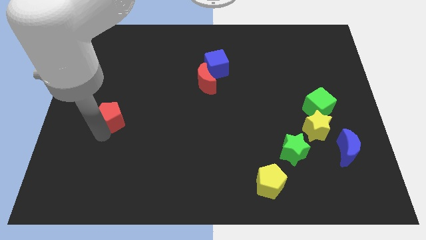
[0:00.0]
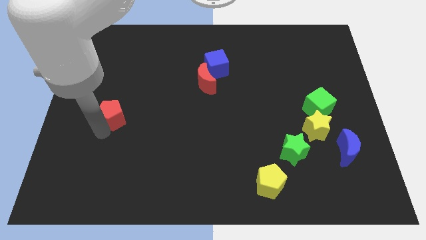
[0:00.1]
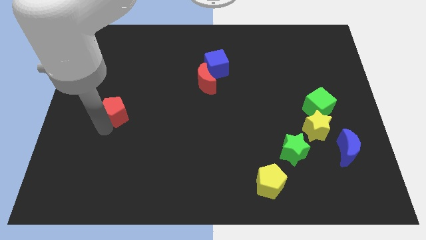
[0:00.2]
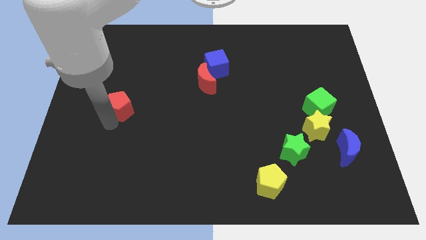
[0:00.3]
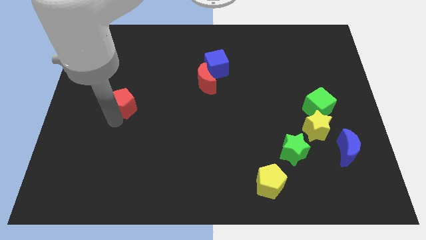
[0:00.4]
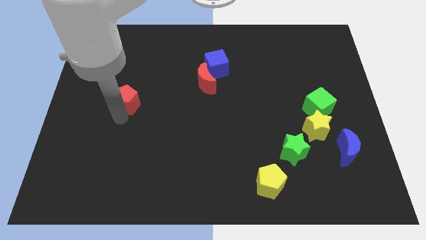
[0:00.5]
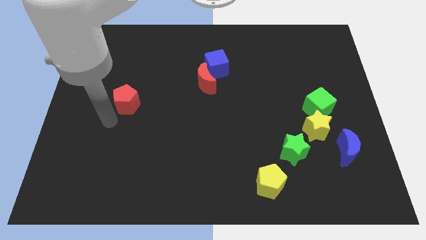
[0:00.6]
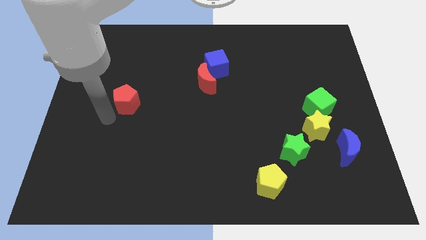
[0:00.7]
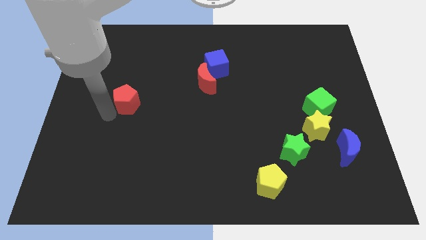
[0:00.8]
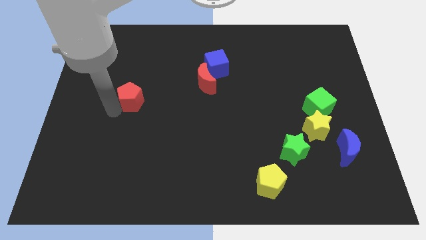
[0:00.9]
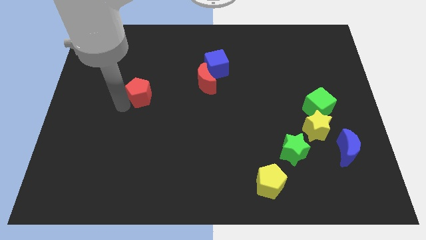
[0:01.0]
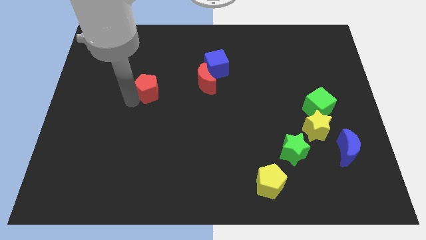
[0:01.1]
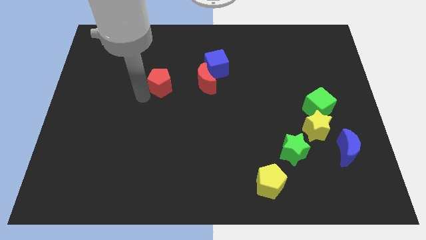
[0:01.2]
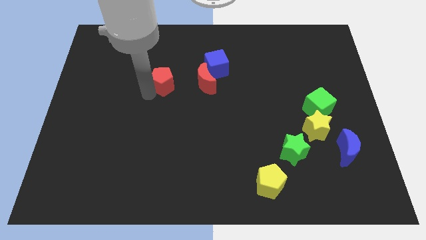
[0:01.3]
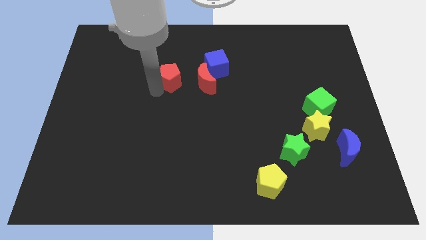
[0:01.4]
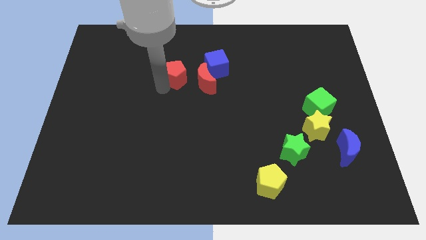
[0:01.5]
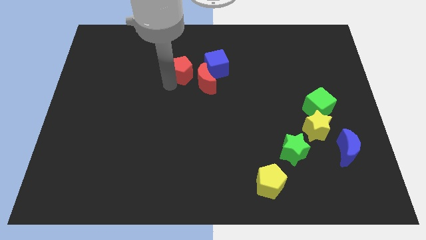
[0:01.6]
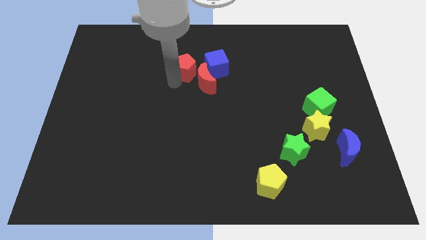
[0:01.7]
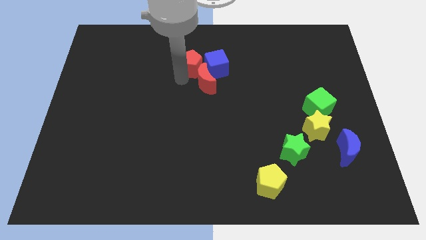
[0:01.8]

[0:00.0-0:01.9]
place the red pentagon to the left of the blue cube

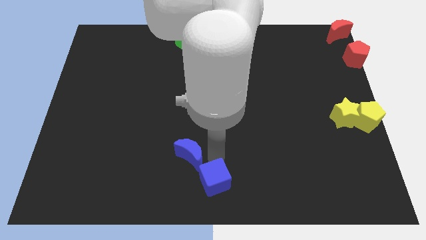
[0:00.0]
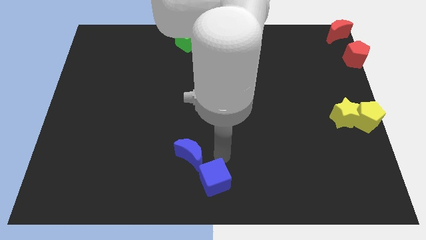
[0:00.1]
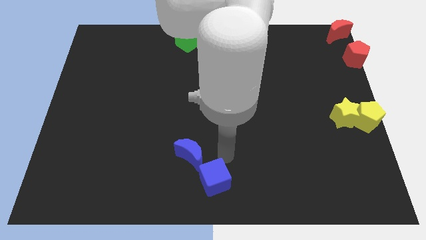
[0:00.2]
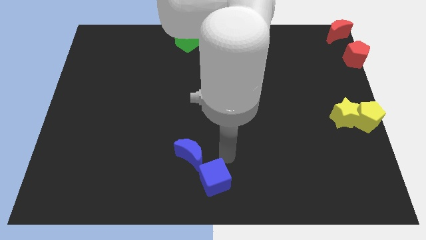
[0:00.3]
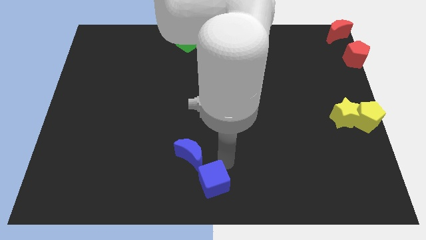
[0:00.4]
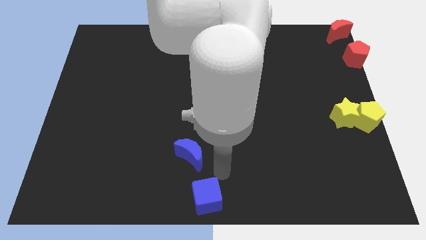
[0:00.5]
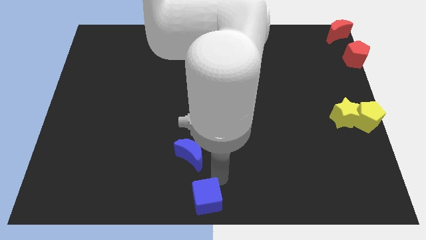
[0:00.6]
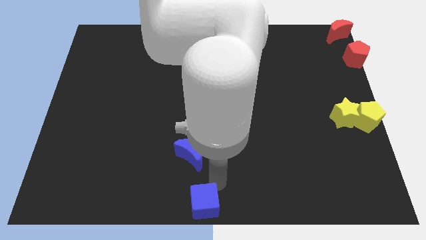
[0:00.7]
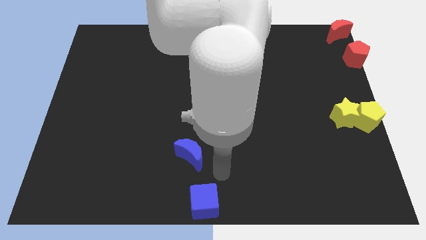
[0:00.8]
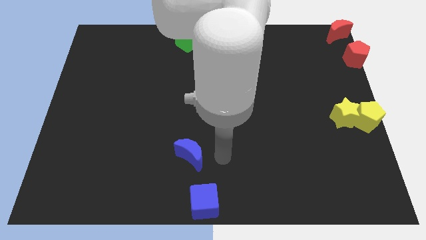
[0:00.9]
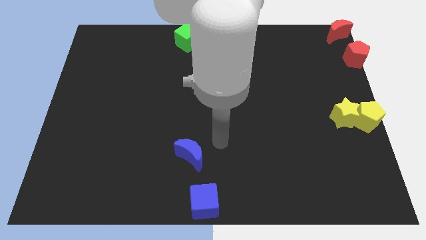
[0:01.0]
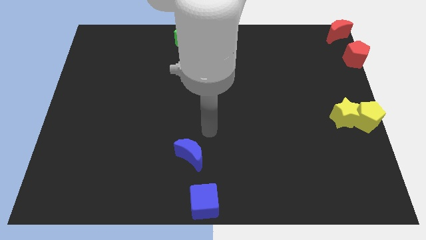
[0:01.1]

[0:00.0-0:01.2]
place the blue cube towards the bottom center of the board

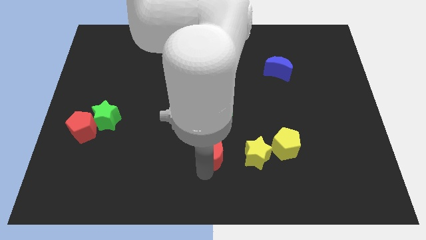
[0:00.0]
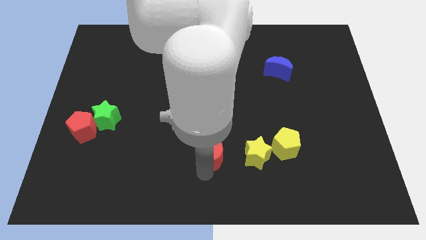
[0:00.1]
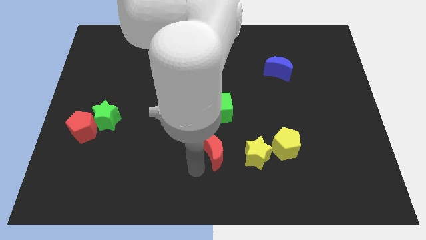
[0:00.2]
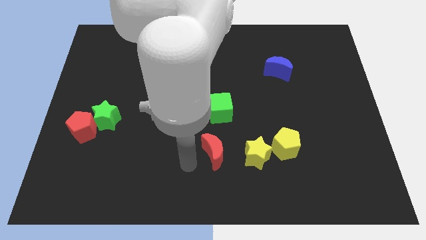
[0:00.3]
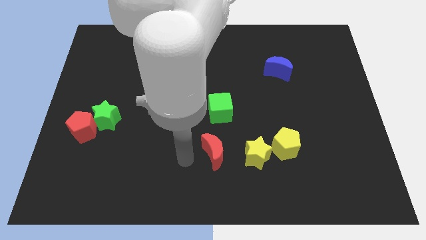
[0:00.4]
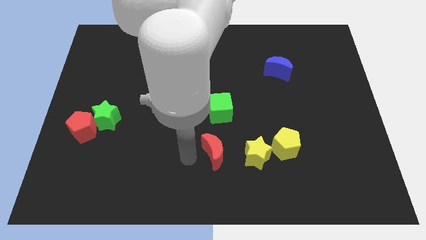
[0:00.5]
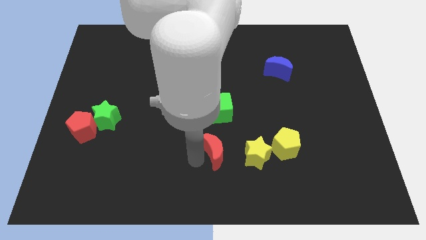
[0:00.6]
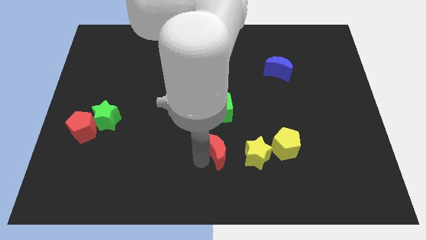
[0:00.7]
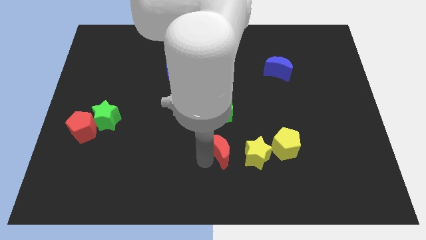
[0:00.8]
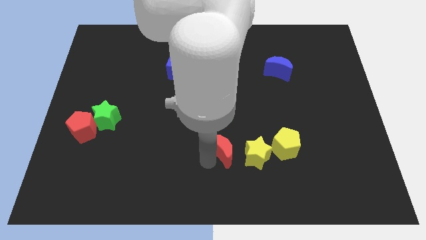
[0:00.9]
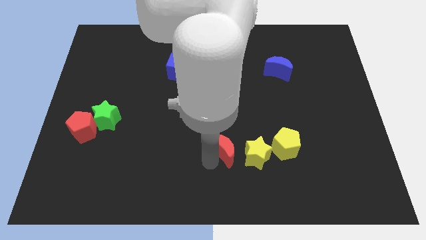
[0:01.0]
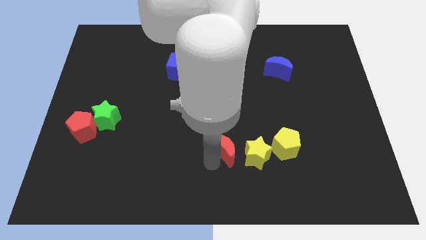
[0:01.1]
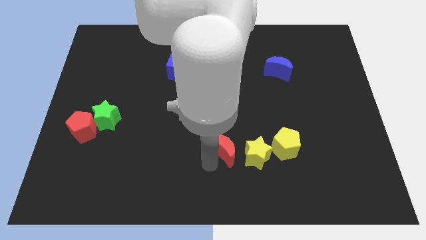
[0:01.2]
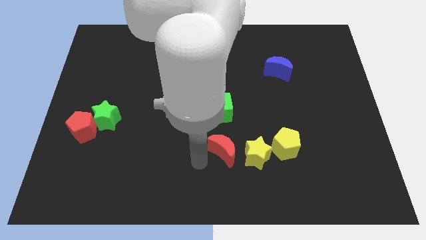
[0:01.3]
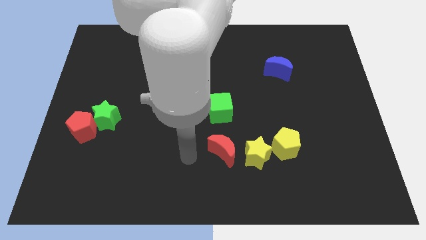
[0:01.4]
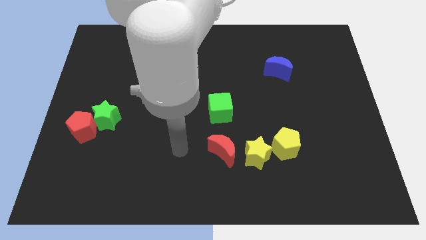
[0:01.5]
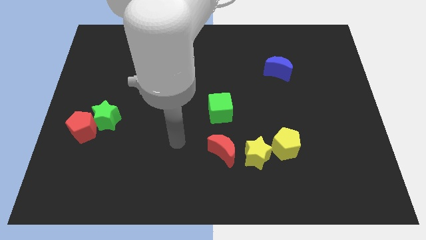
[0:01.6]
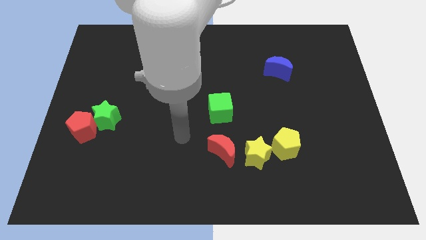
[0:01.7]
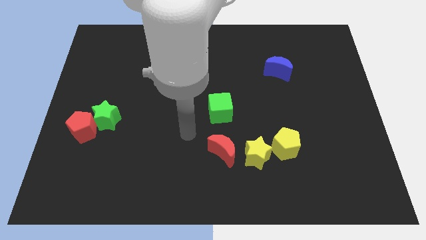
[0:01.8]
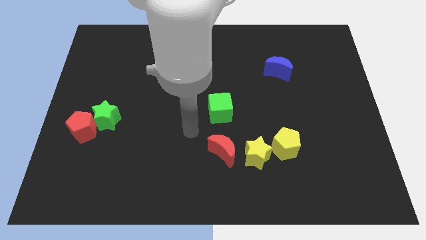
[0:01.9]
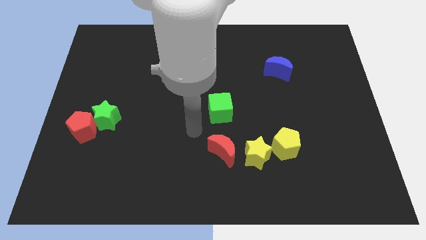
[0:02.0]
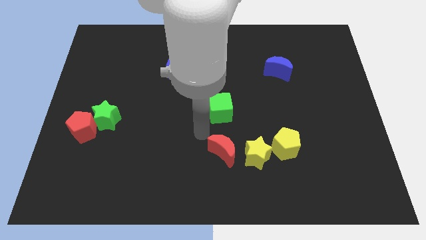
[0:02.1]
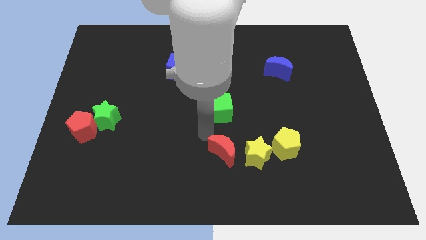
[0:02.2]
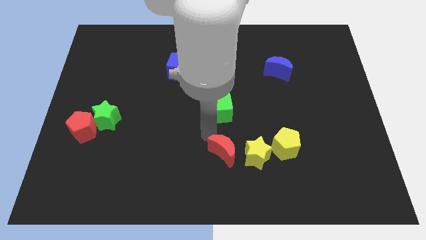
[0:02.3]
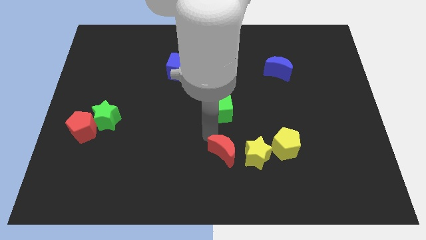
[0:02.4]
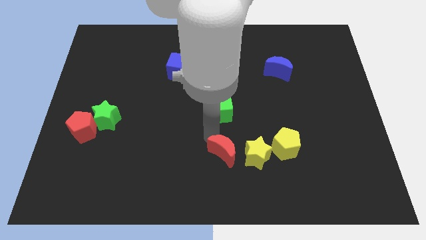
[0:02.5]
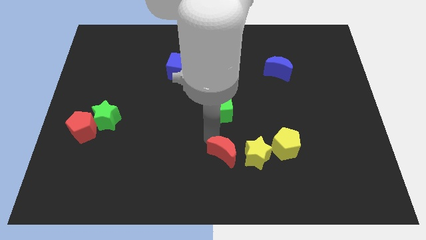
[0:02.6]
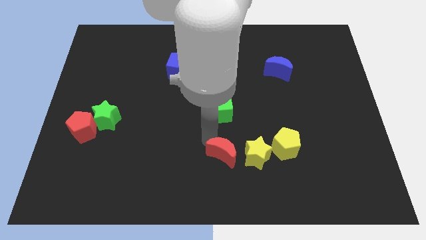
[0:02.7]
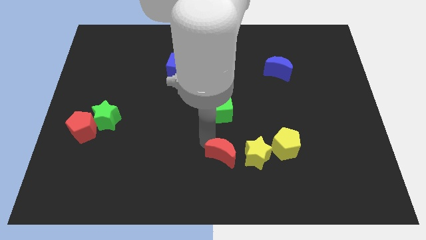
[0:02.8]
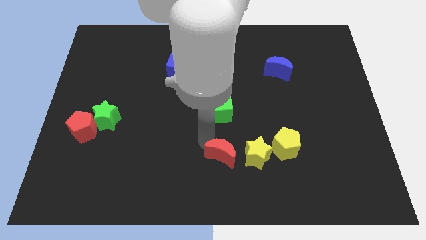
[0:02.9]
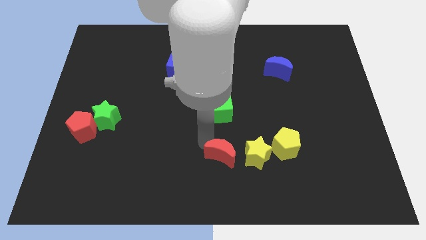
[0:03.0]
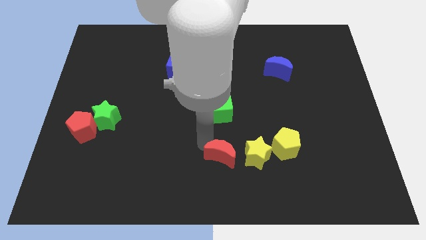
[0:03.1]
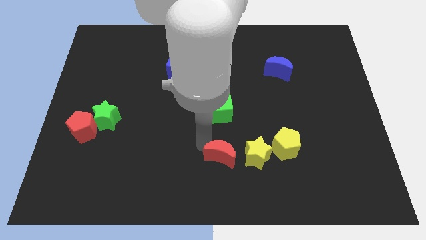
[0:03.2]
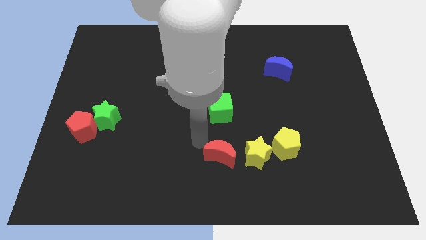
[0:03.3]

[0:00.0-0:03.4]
move the red moon a bit towards the right

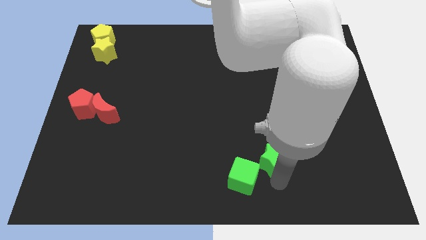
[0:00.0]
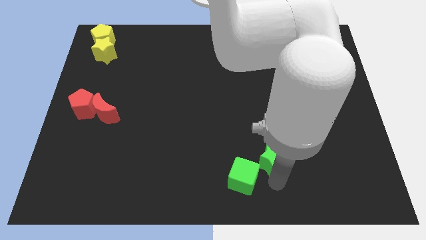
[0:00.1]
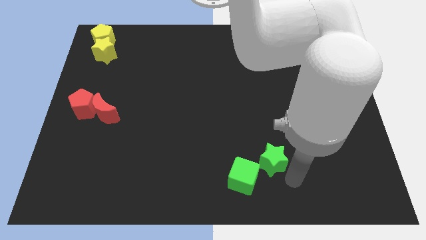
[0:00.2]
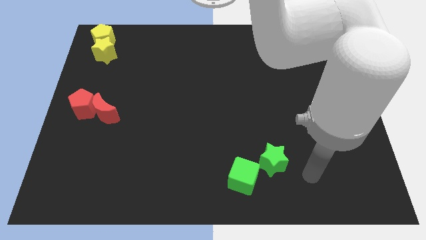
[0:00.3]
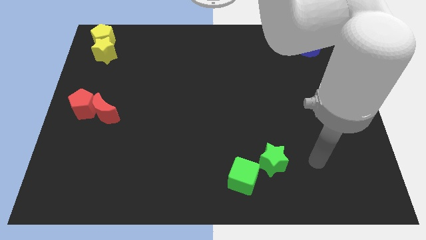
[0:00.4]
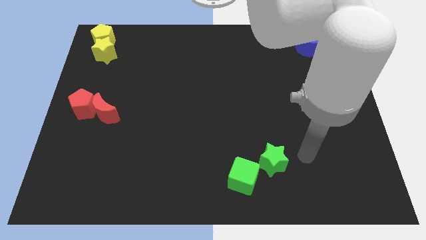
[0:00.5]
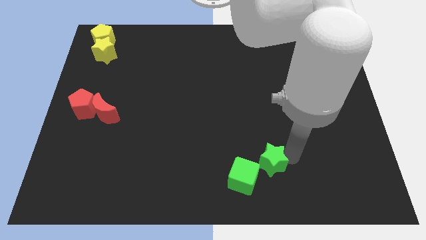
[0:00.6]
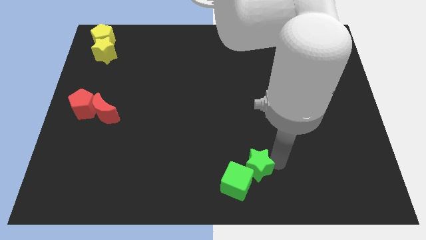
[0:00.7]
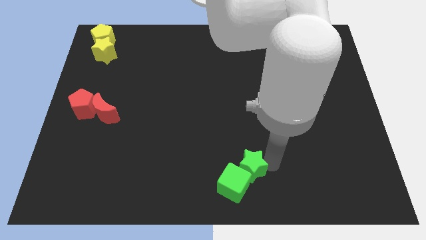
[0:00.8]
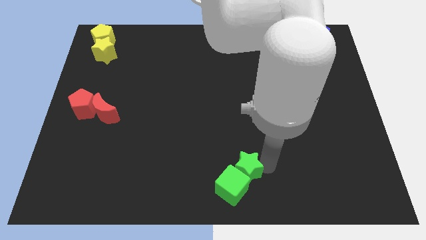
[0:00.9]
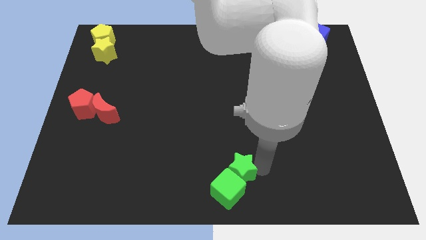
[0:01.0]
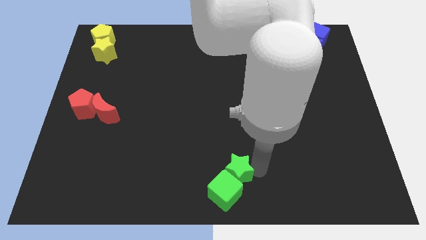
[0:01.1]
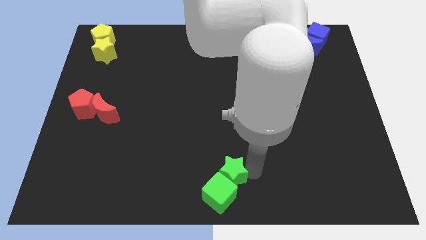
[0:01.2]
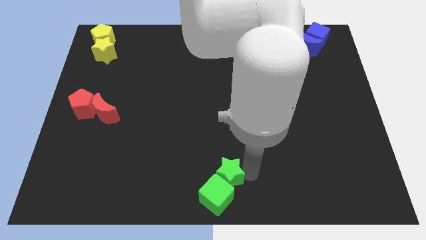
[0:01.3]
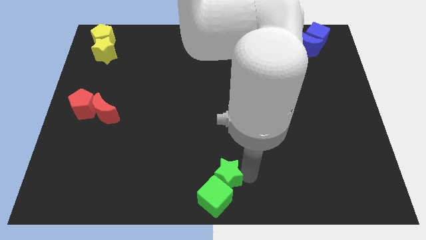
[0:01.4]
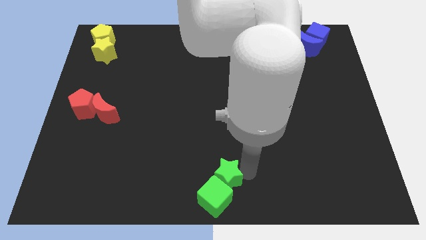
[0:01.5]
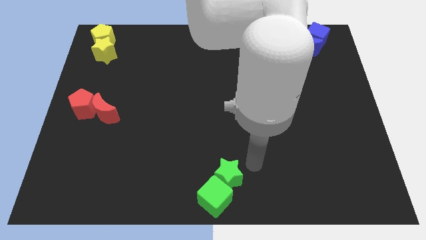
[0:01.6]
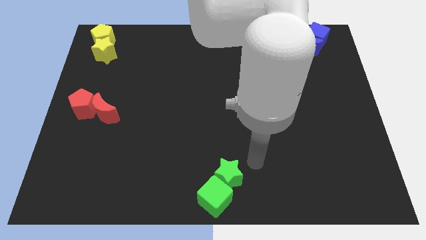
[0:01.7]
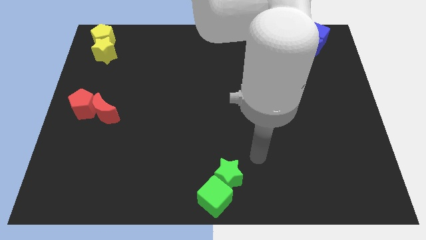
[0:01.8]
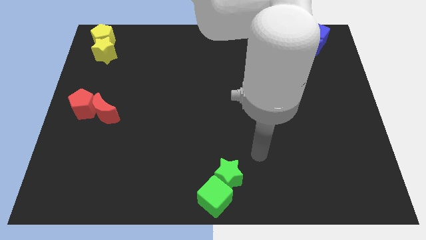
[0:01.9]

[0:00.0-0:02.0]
push green blocks into the bottom center

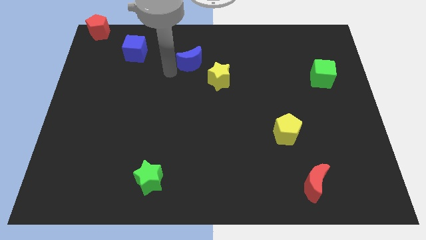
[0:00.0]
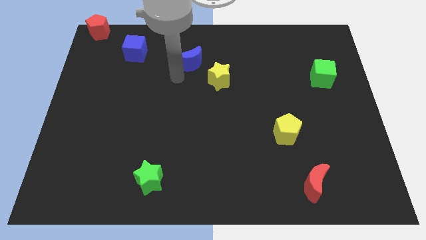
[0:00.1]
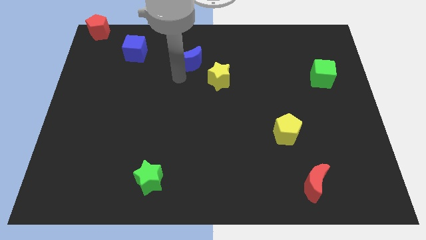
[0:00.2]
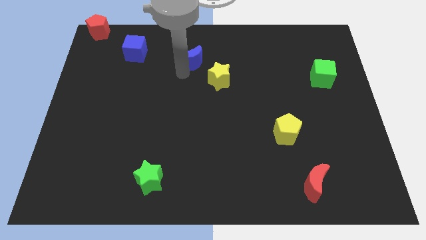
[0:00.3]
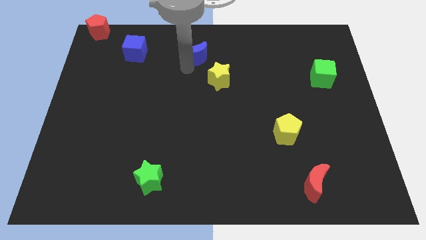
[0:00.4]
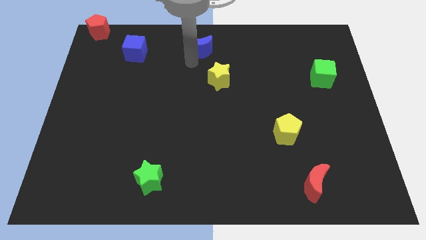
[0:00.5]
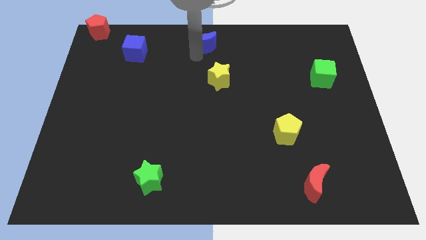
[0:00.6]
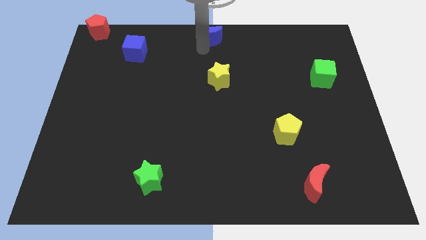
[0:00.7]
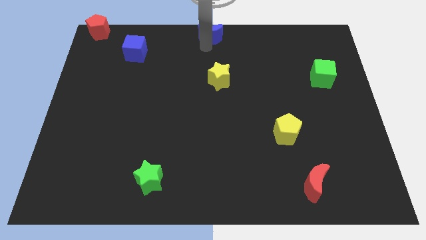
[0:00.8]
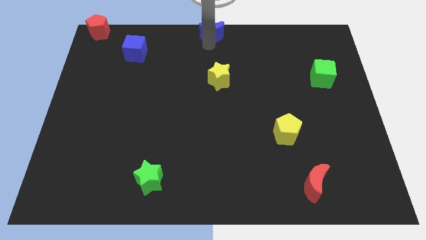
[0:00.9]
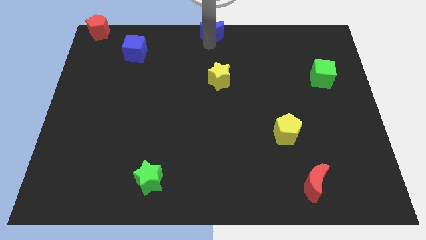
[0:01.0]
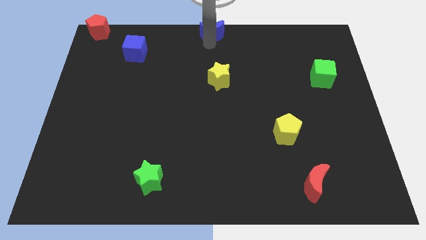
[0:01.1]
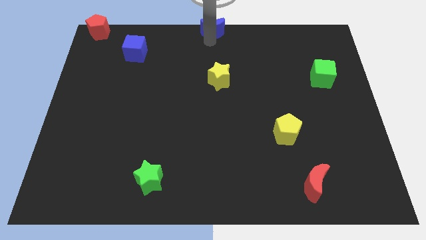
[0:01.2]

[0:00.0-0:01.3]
place the blue moon vertically above the yellow star
